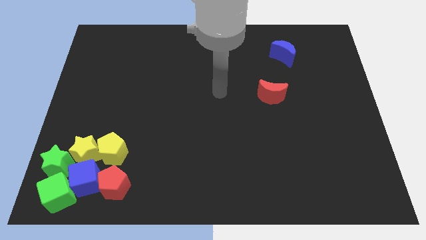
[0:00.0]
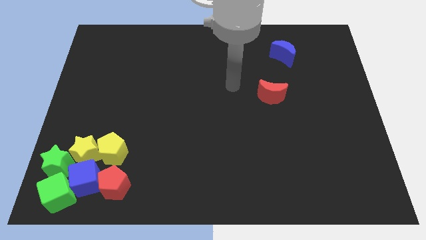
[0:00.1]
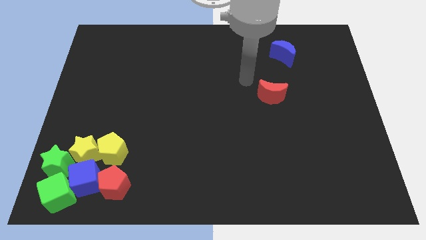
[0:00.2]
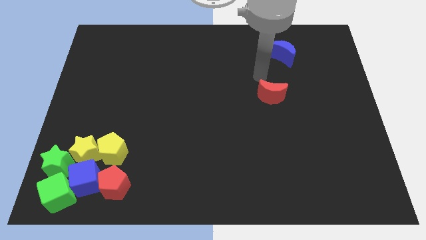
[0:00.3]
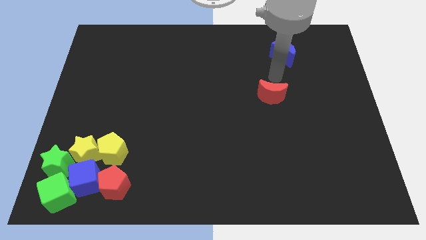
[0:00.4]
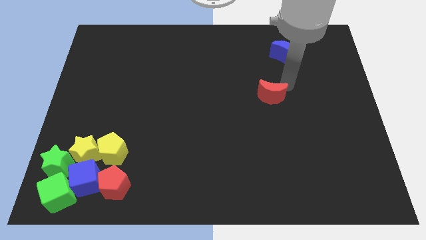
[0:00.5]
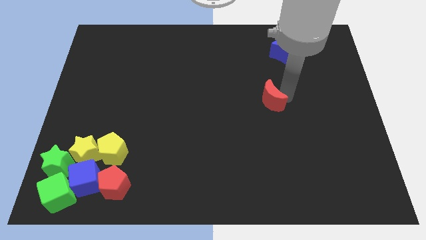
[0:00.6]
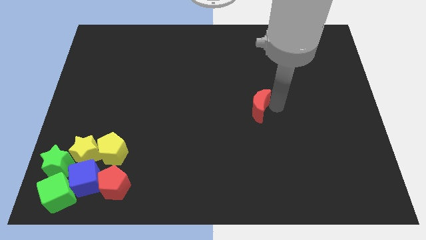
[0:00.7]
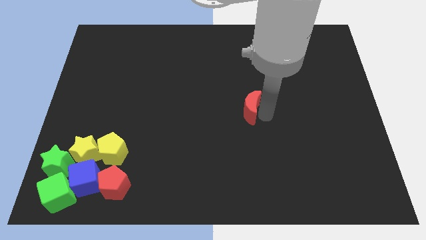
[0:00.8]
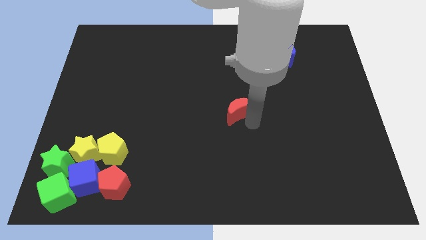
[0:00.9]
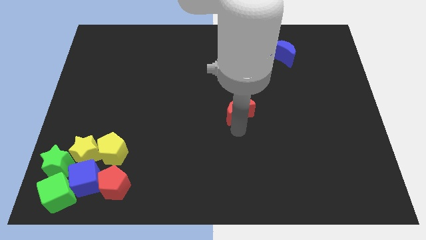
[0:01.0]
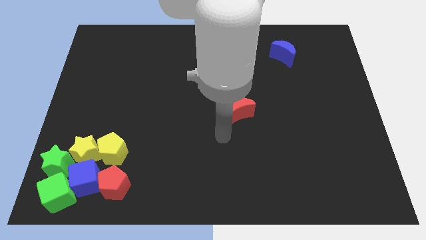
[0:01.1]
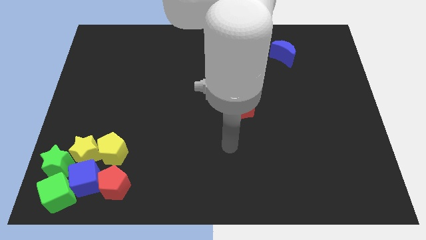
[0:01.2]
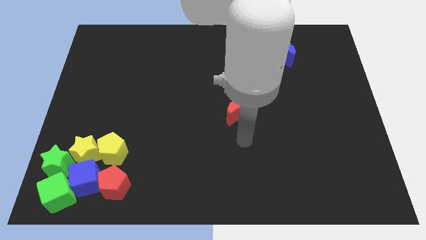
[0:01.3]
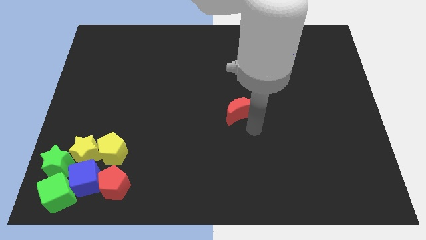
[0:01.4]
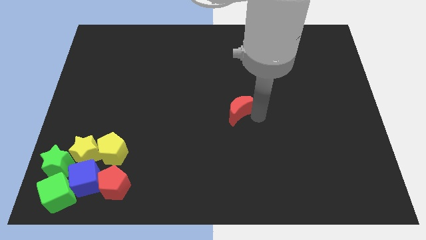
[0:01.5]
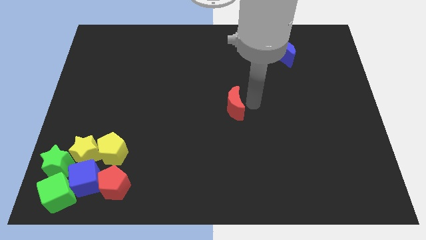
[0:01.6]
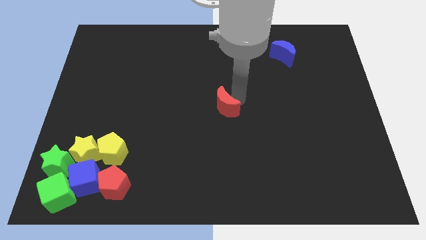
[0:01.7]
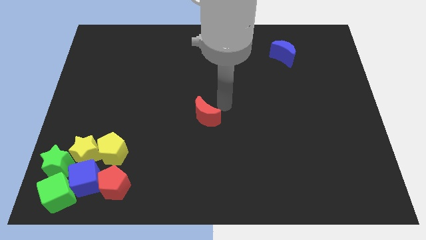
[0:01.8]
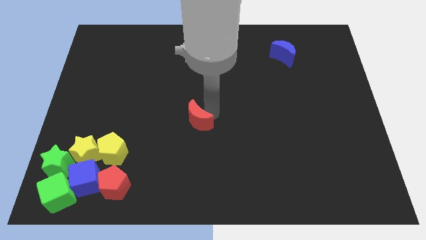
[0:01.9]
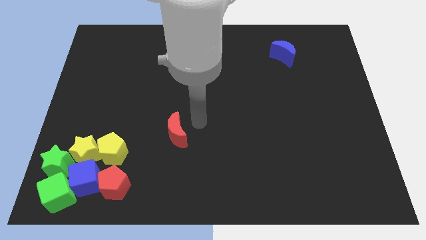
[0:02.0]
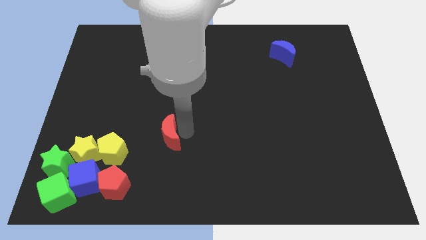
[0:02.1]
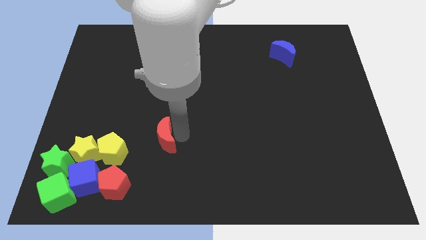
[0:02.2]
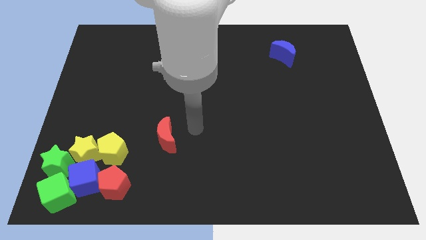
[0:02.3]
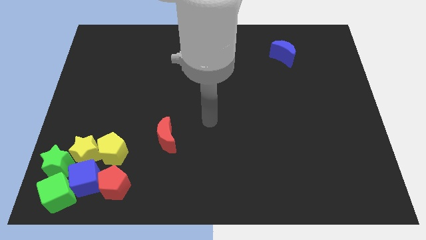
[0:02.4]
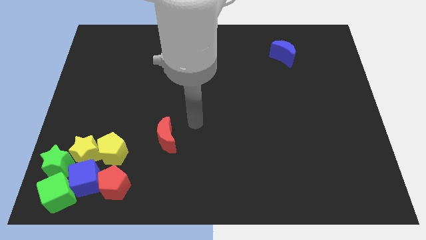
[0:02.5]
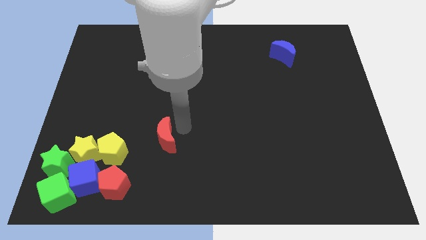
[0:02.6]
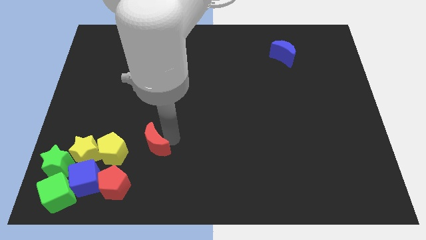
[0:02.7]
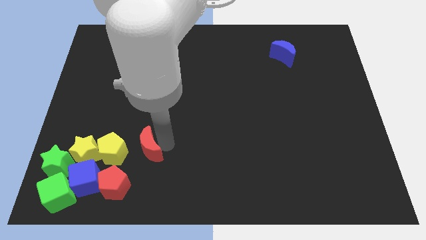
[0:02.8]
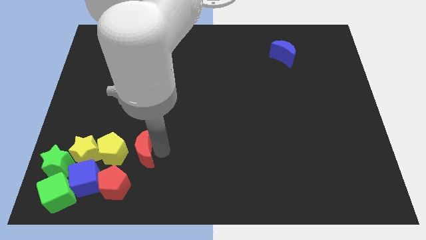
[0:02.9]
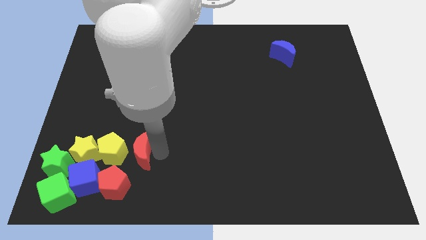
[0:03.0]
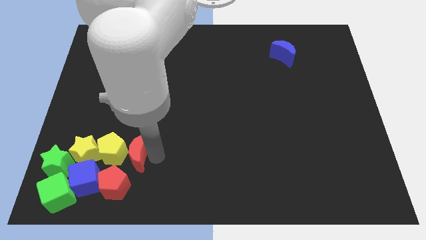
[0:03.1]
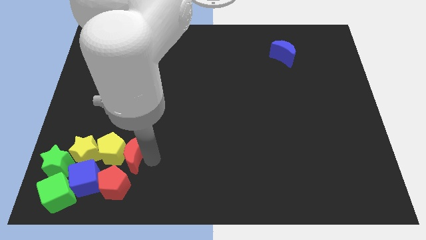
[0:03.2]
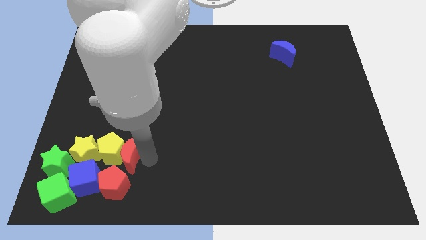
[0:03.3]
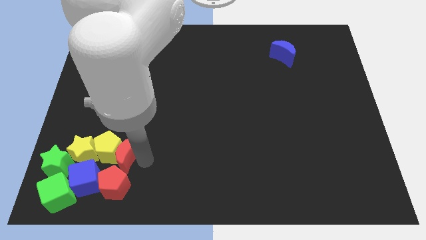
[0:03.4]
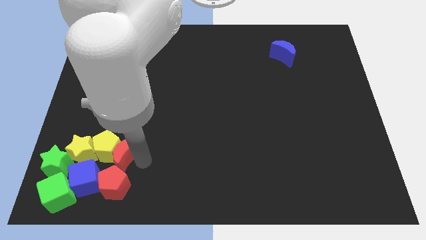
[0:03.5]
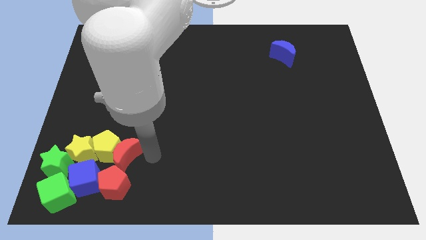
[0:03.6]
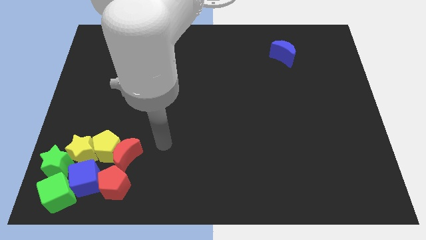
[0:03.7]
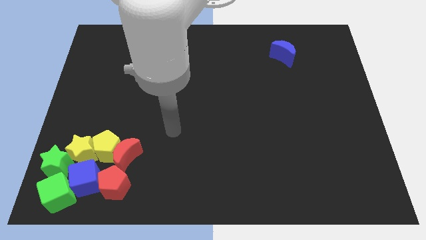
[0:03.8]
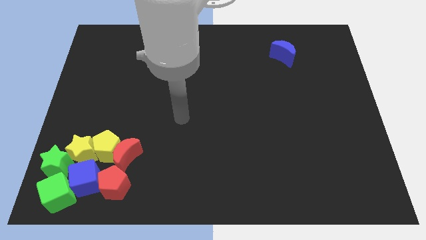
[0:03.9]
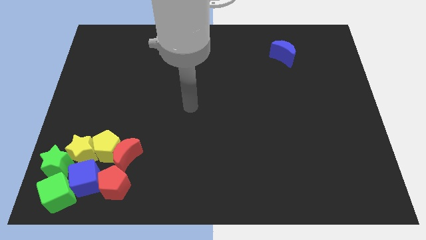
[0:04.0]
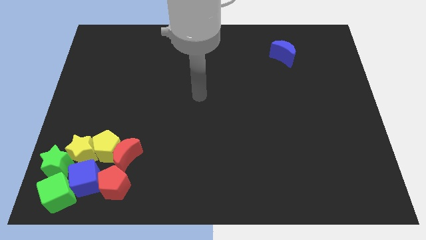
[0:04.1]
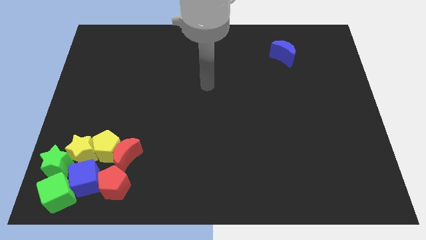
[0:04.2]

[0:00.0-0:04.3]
place the red crescent into the yellow pentagon

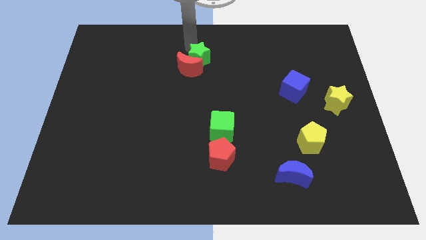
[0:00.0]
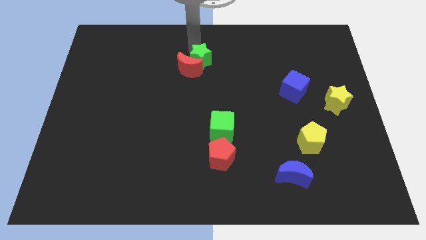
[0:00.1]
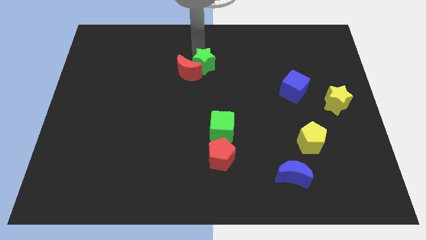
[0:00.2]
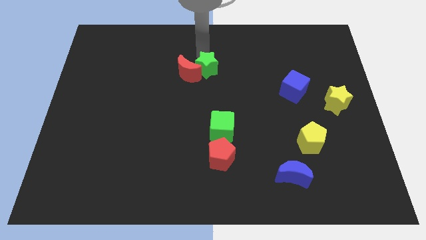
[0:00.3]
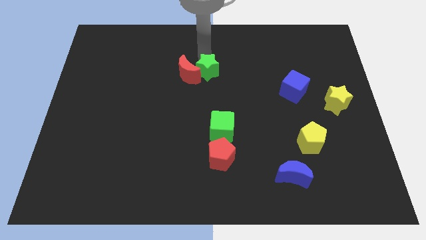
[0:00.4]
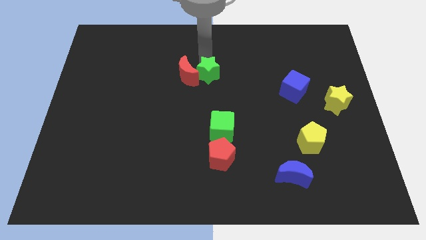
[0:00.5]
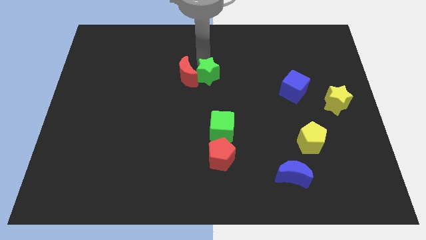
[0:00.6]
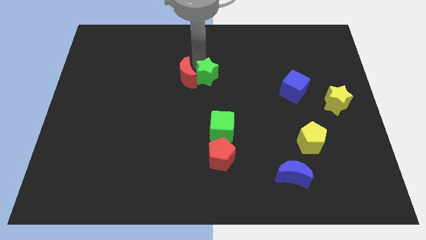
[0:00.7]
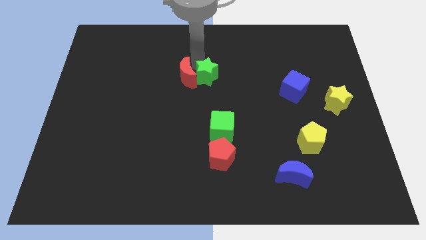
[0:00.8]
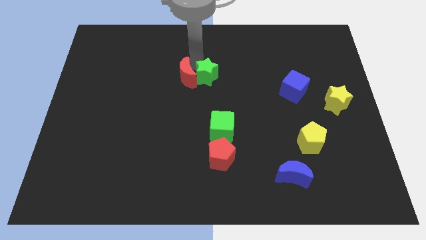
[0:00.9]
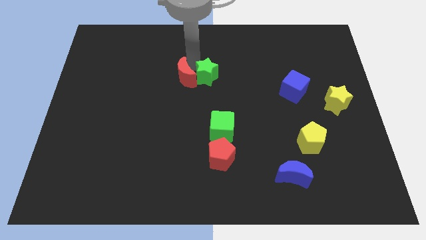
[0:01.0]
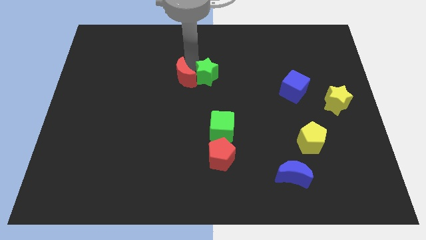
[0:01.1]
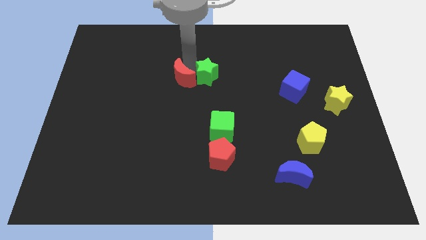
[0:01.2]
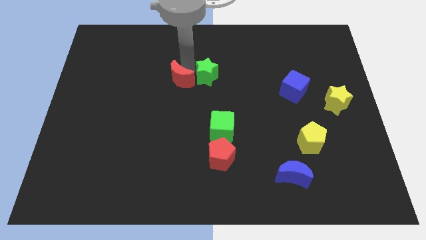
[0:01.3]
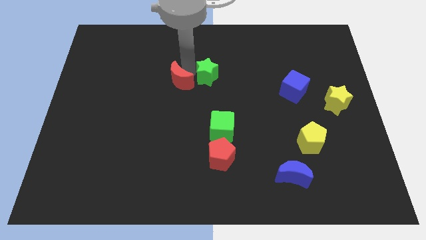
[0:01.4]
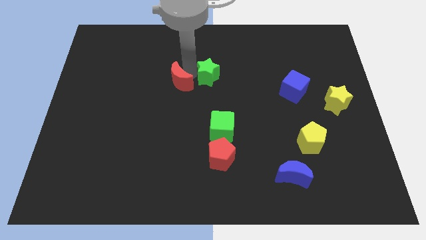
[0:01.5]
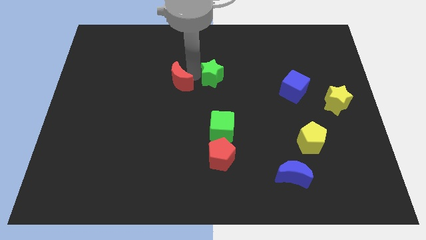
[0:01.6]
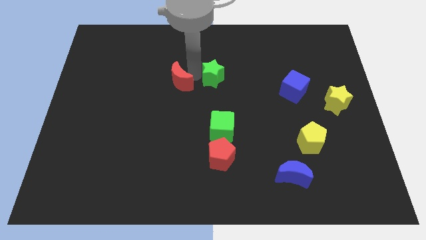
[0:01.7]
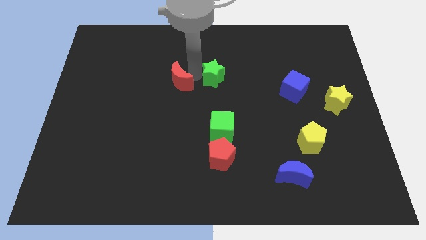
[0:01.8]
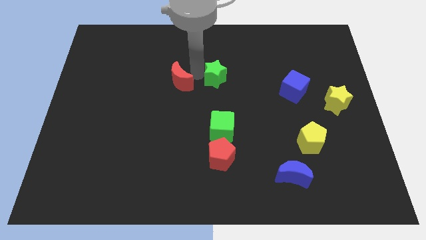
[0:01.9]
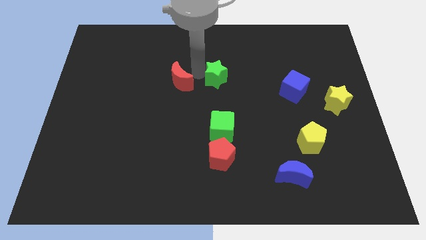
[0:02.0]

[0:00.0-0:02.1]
seperate the green star from the red moon

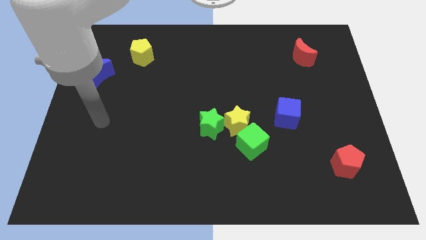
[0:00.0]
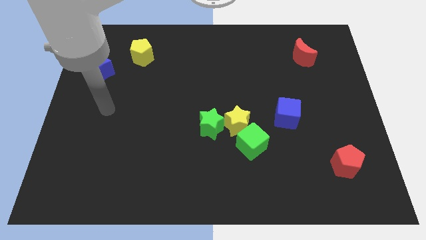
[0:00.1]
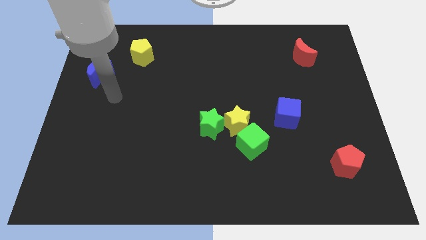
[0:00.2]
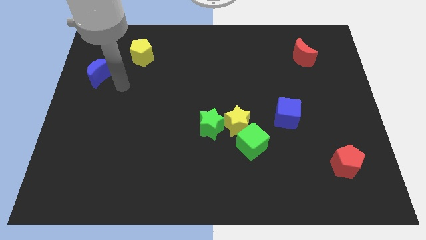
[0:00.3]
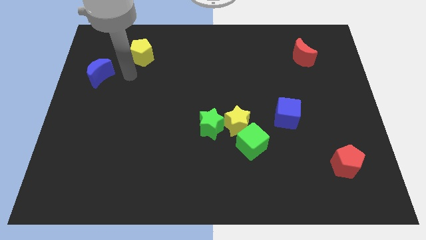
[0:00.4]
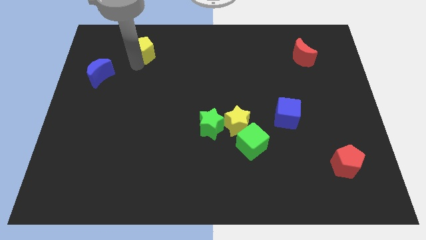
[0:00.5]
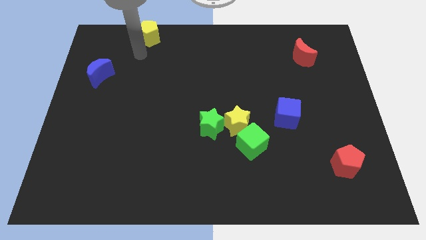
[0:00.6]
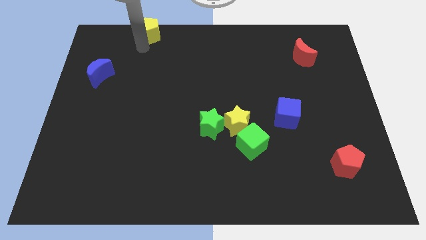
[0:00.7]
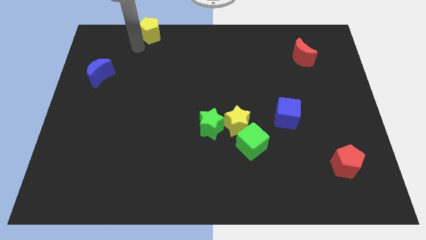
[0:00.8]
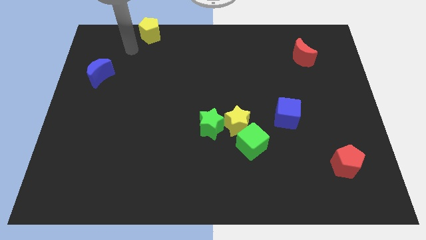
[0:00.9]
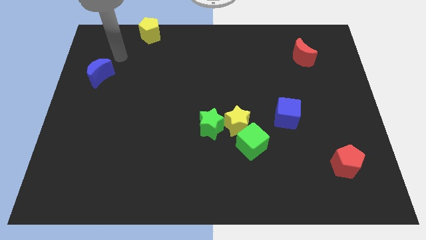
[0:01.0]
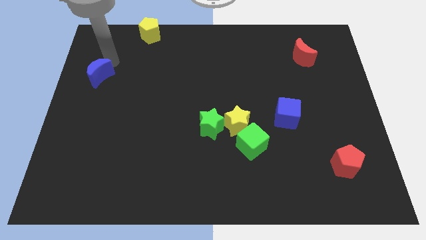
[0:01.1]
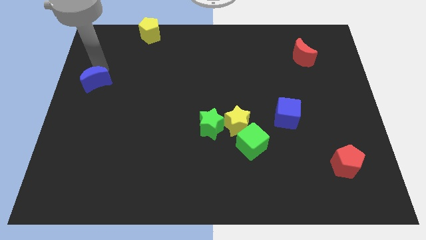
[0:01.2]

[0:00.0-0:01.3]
move your arm to the top side of blue moon

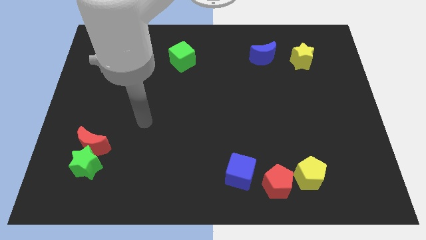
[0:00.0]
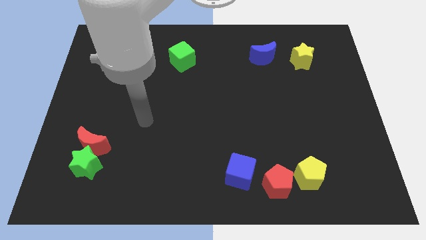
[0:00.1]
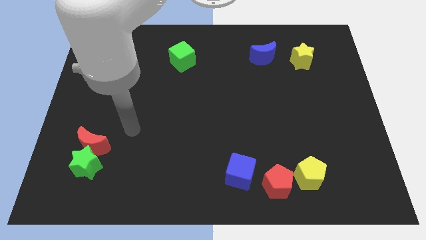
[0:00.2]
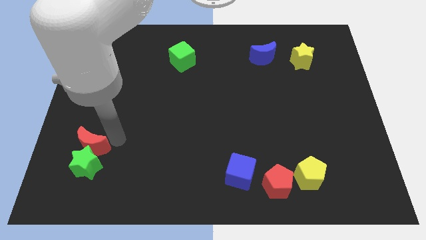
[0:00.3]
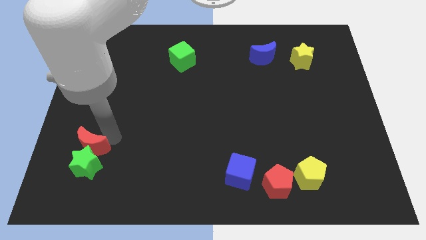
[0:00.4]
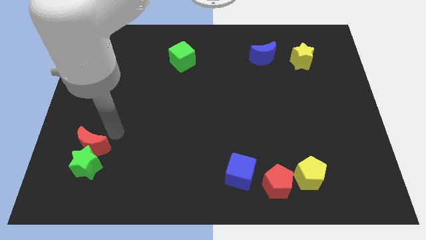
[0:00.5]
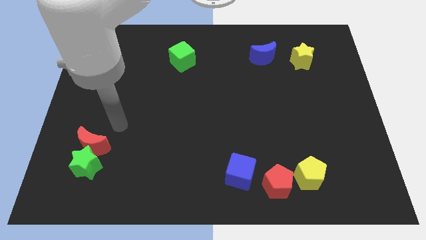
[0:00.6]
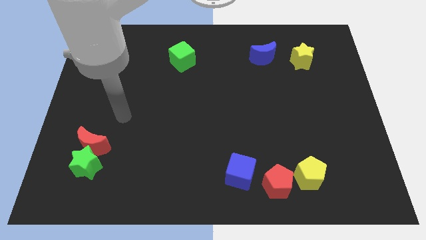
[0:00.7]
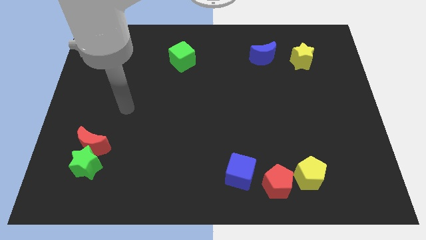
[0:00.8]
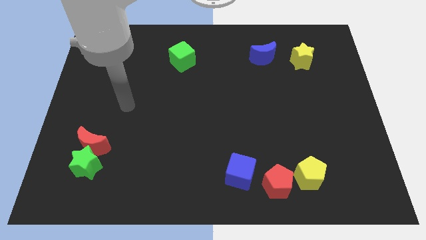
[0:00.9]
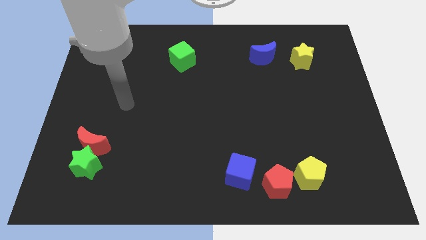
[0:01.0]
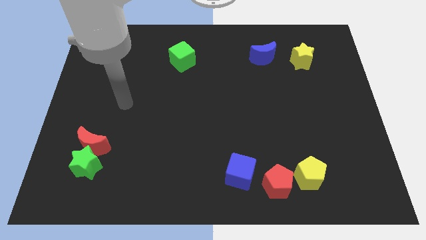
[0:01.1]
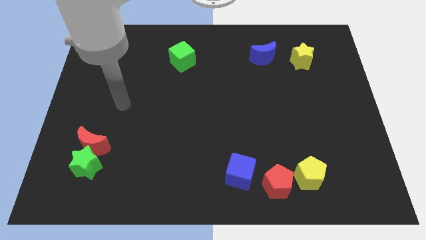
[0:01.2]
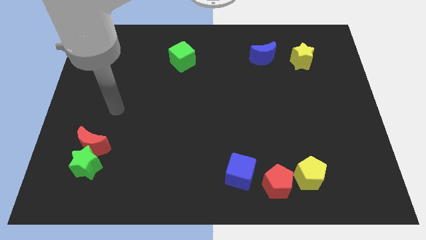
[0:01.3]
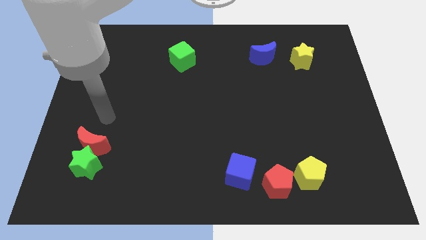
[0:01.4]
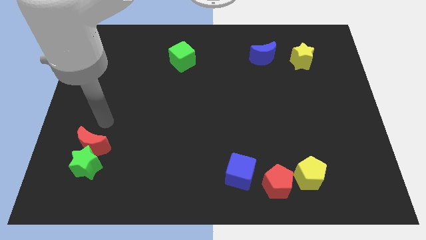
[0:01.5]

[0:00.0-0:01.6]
put your arm above the red crescent
